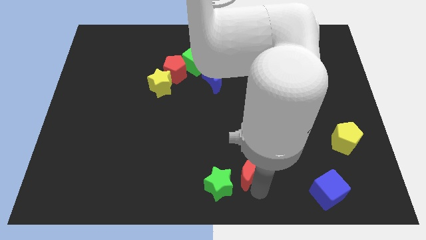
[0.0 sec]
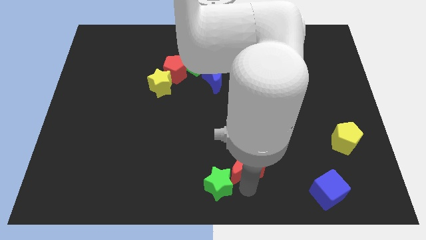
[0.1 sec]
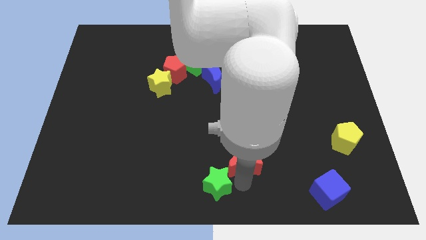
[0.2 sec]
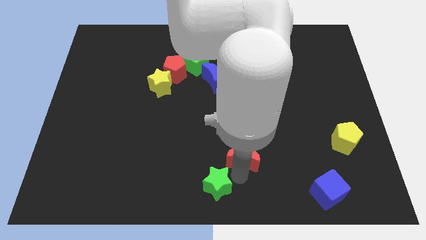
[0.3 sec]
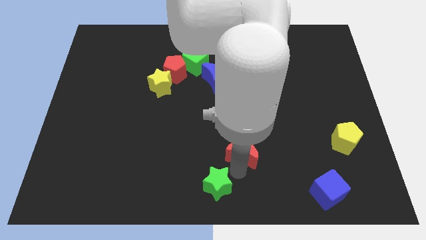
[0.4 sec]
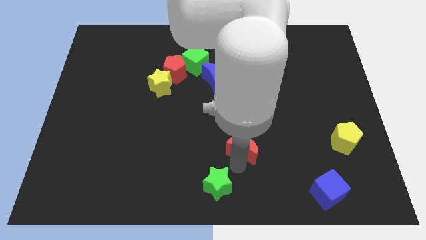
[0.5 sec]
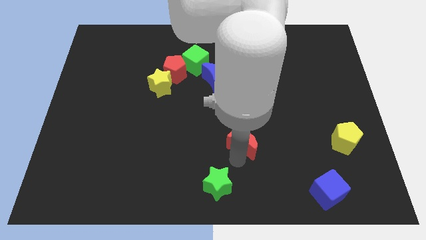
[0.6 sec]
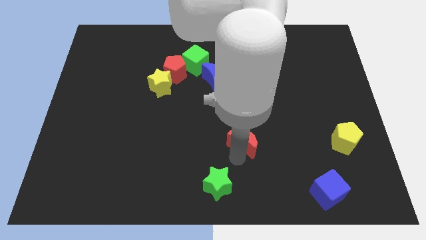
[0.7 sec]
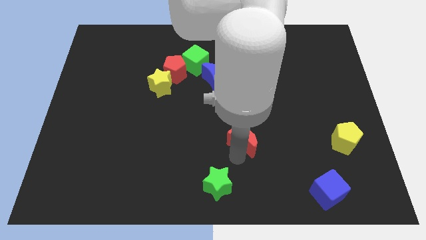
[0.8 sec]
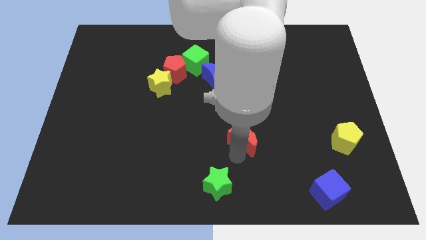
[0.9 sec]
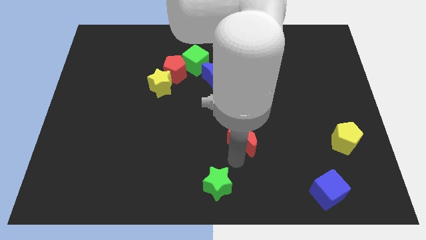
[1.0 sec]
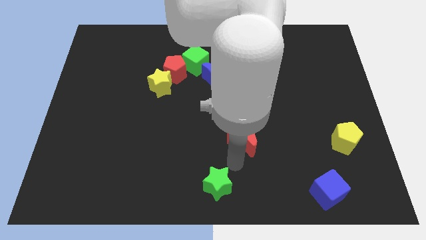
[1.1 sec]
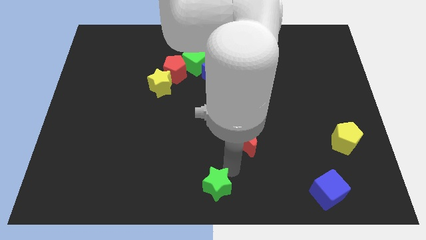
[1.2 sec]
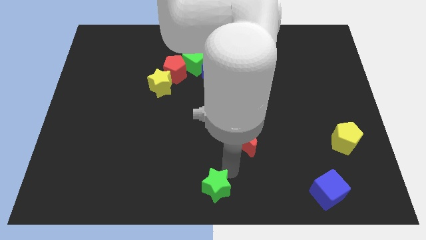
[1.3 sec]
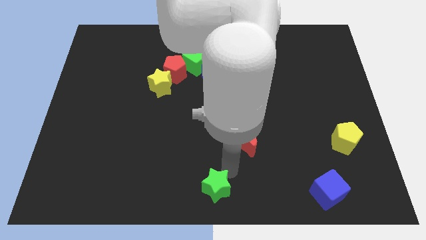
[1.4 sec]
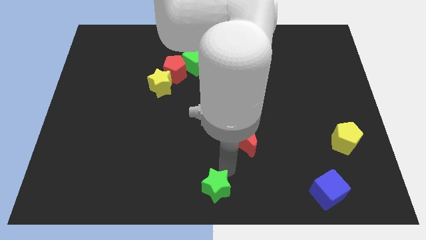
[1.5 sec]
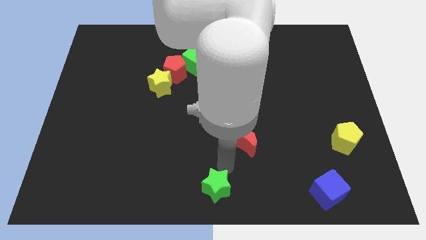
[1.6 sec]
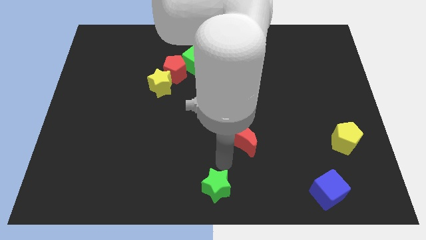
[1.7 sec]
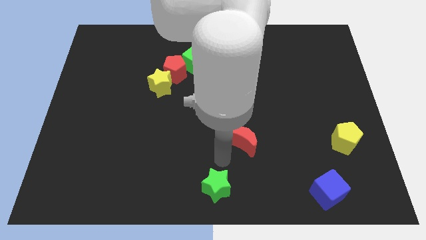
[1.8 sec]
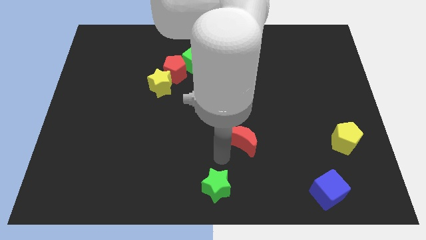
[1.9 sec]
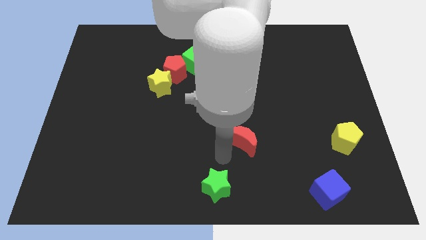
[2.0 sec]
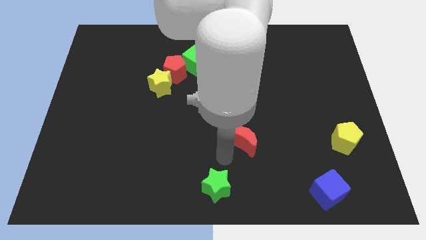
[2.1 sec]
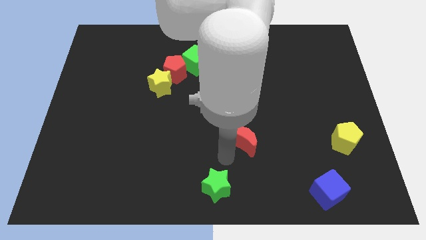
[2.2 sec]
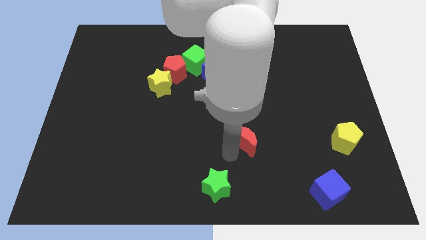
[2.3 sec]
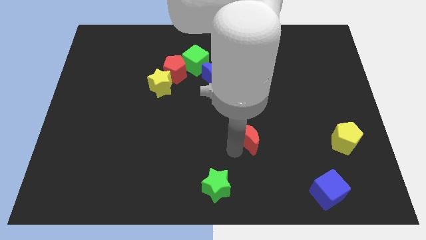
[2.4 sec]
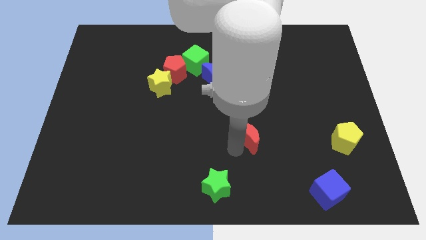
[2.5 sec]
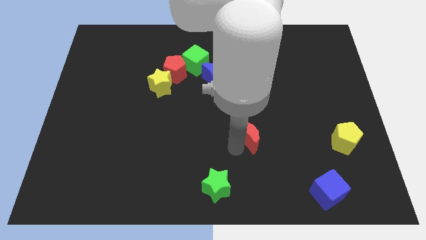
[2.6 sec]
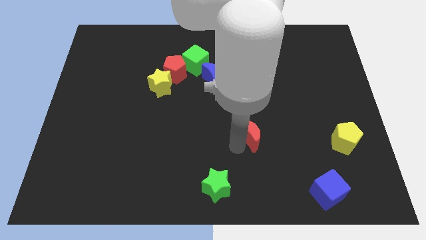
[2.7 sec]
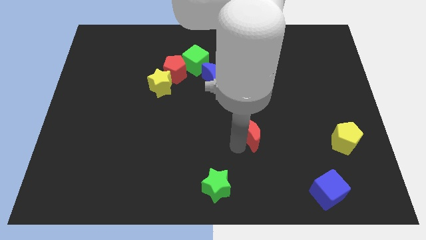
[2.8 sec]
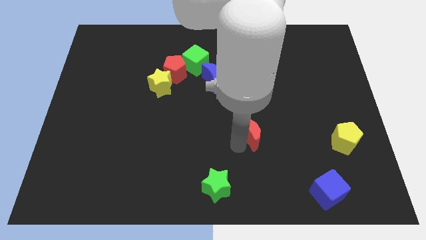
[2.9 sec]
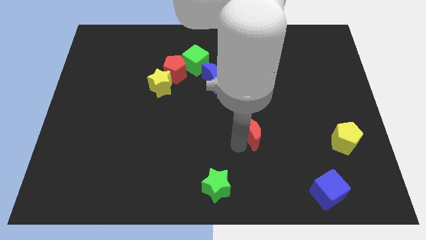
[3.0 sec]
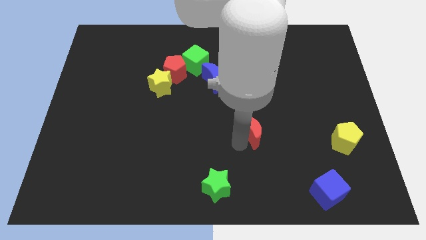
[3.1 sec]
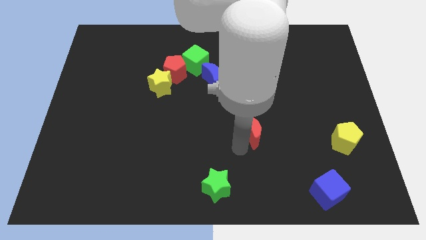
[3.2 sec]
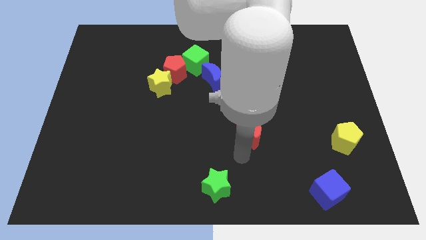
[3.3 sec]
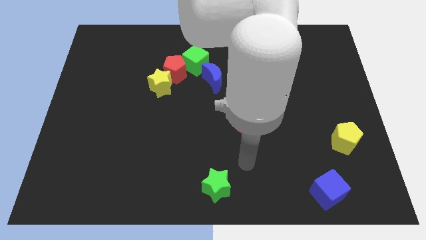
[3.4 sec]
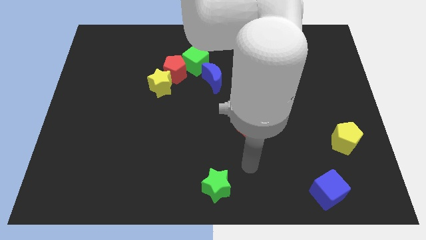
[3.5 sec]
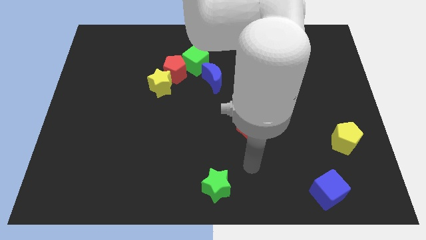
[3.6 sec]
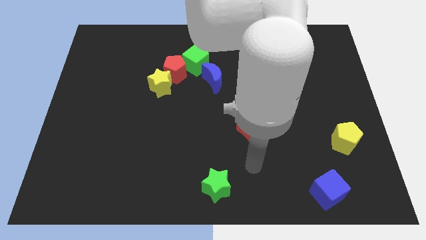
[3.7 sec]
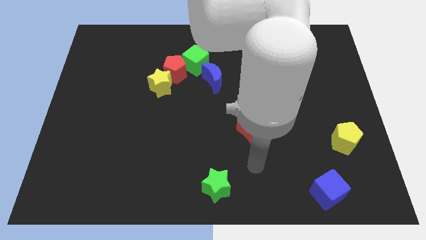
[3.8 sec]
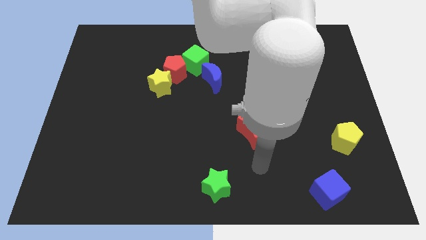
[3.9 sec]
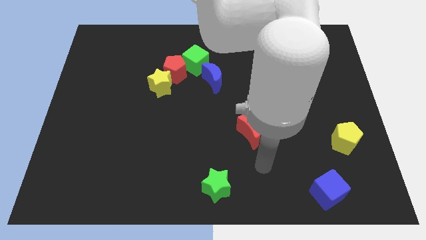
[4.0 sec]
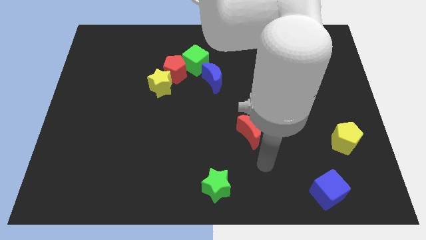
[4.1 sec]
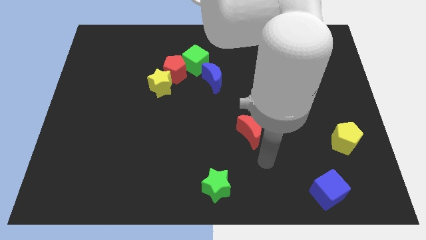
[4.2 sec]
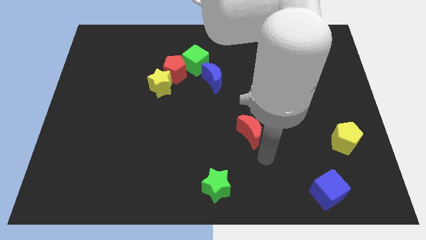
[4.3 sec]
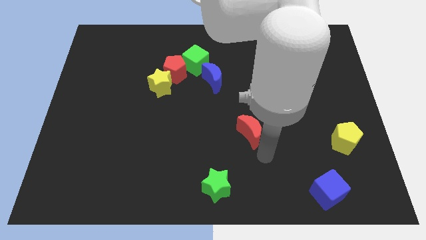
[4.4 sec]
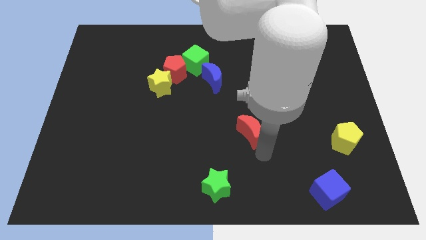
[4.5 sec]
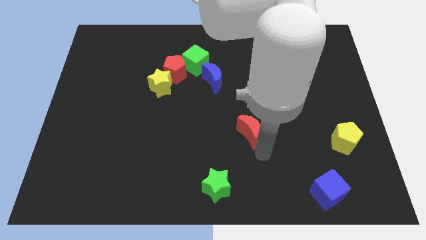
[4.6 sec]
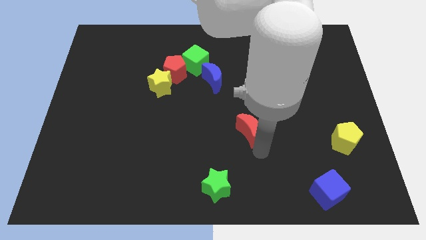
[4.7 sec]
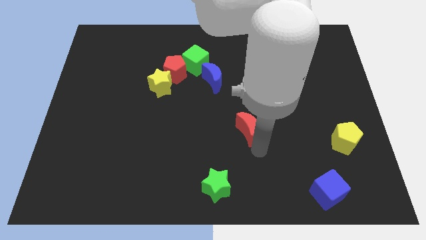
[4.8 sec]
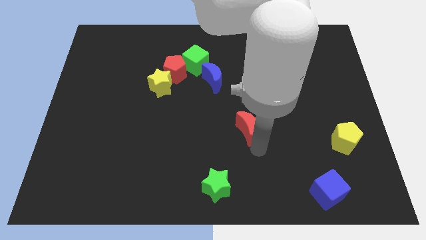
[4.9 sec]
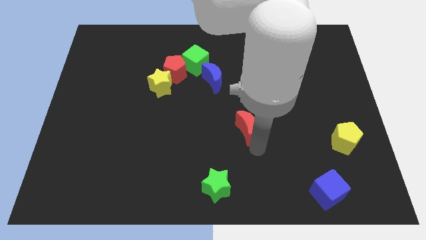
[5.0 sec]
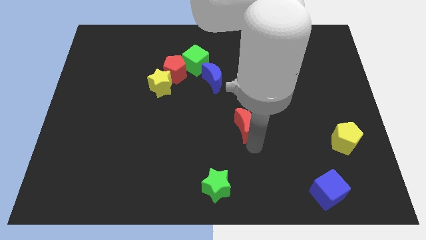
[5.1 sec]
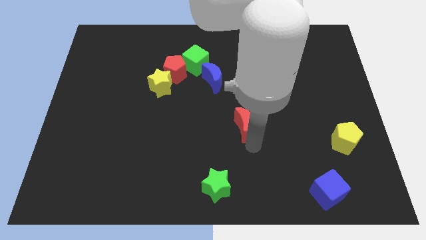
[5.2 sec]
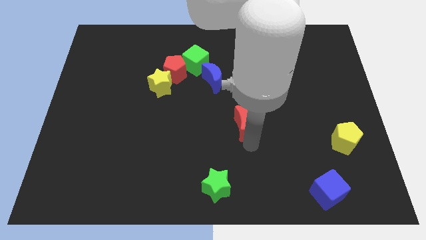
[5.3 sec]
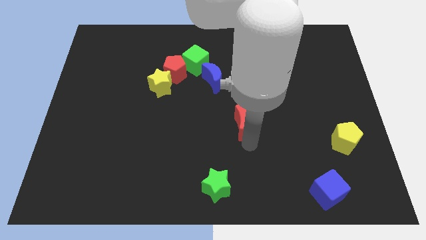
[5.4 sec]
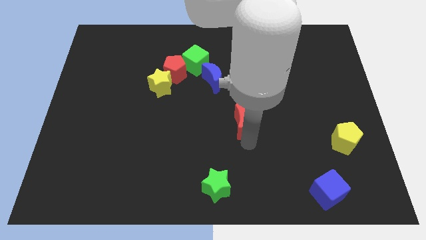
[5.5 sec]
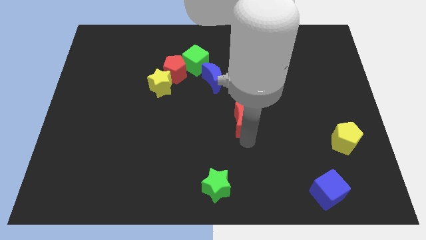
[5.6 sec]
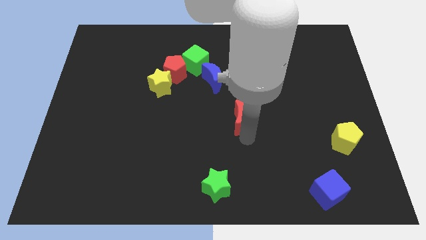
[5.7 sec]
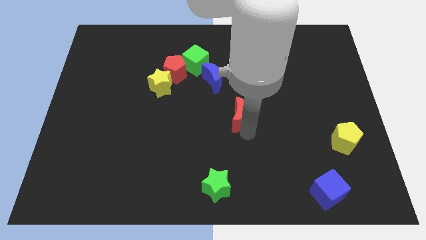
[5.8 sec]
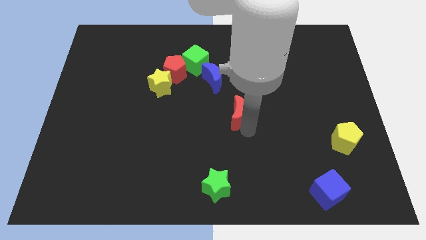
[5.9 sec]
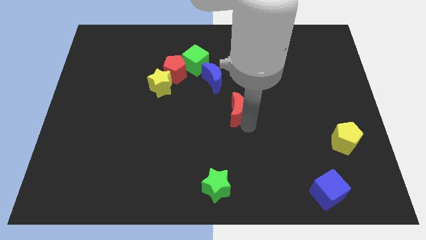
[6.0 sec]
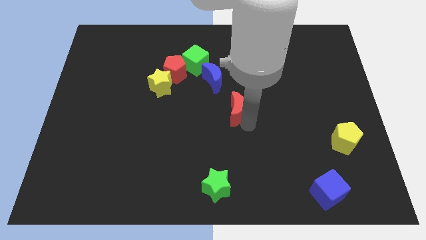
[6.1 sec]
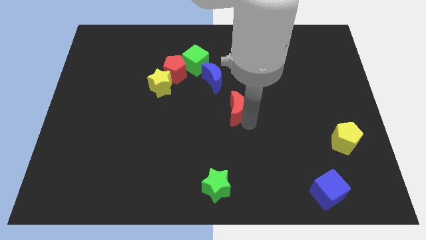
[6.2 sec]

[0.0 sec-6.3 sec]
separate red moon from green star

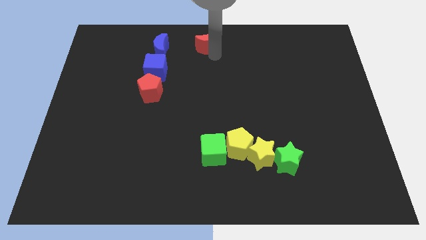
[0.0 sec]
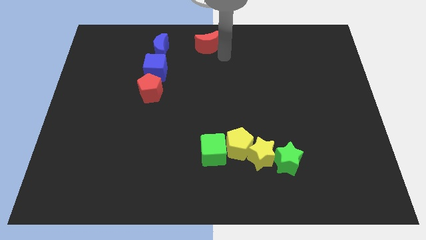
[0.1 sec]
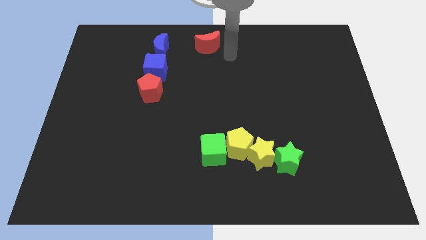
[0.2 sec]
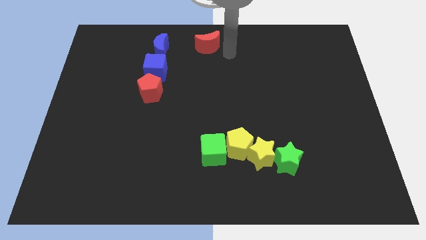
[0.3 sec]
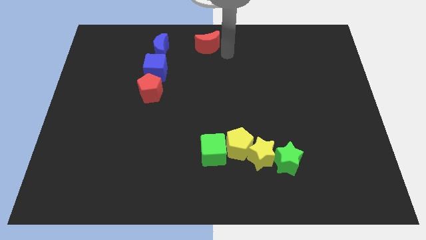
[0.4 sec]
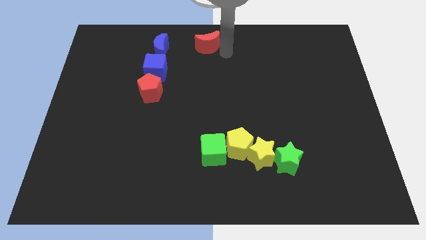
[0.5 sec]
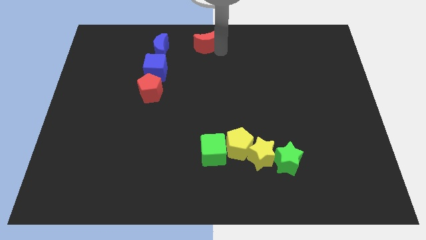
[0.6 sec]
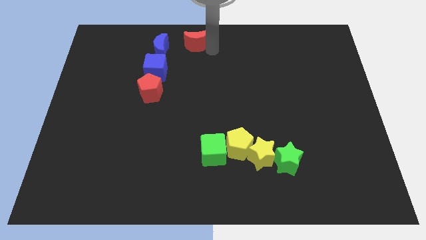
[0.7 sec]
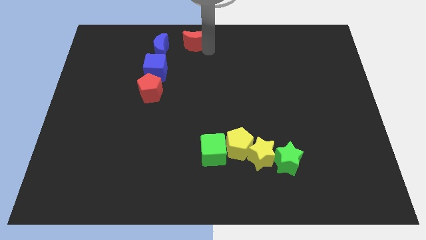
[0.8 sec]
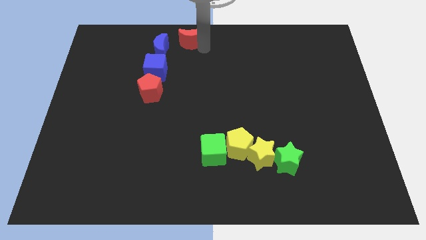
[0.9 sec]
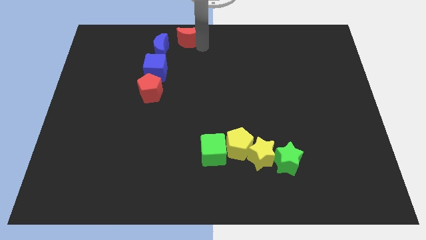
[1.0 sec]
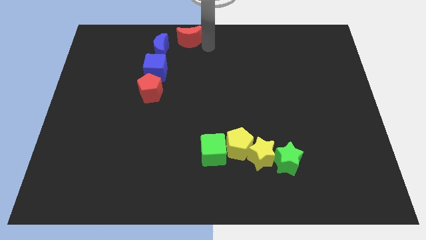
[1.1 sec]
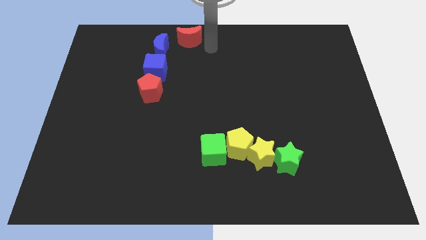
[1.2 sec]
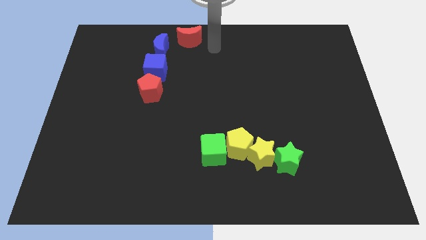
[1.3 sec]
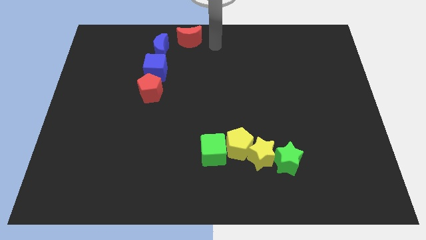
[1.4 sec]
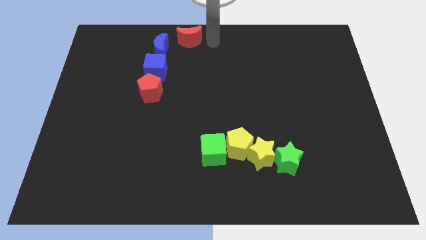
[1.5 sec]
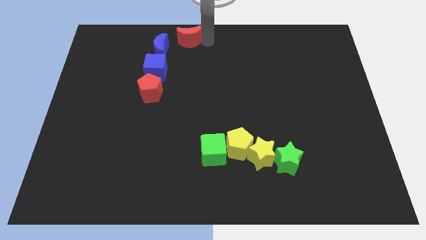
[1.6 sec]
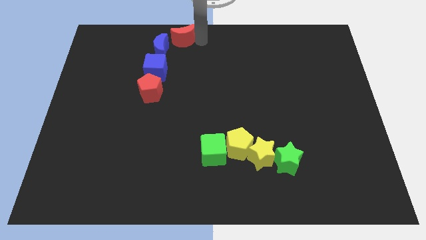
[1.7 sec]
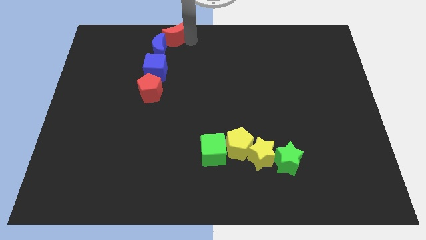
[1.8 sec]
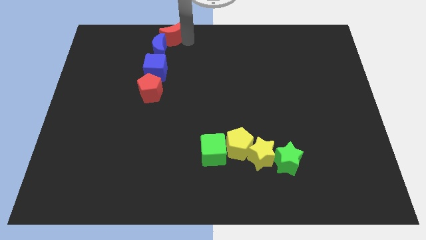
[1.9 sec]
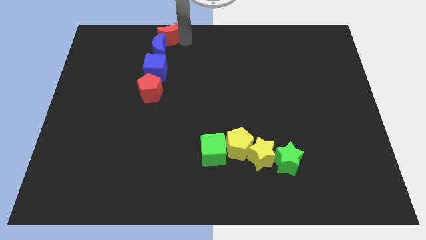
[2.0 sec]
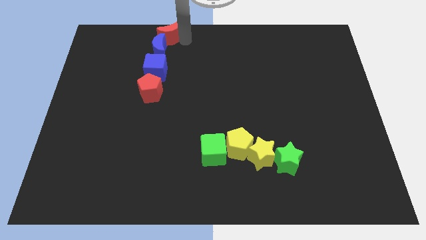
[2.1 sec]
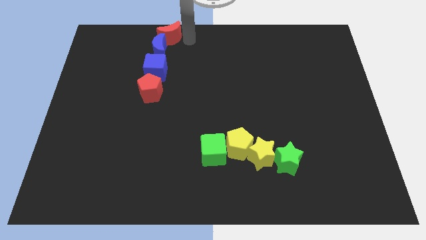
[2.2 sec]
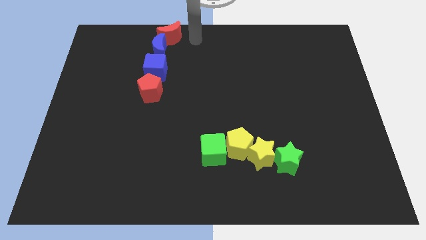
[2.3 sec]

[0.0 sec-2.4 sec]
place the red moon above the blue moon

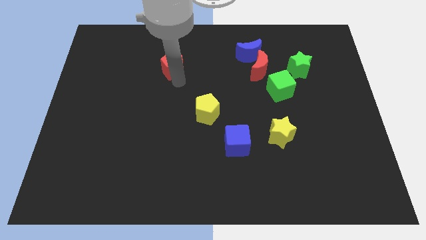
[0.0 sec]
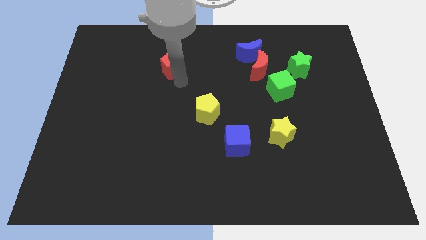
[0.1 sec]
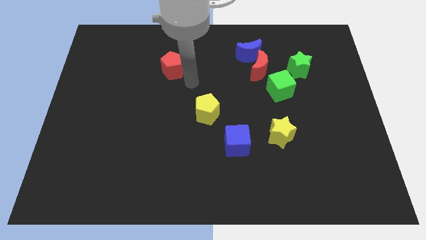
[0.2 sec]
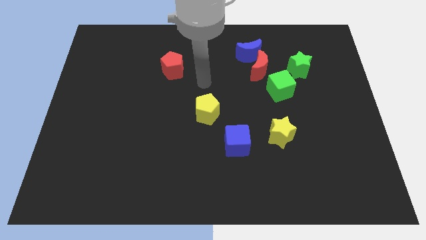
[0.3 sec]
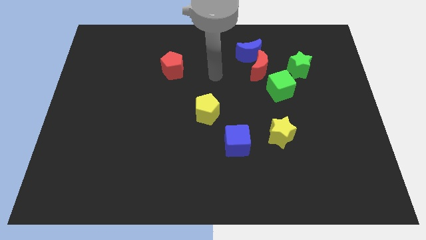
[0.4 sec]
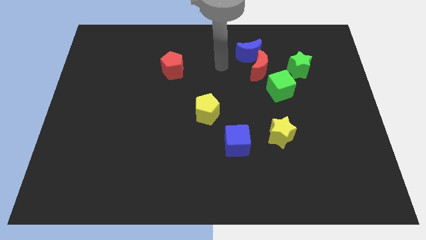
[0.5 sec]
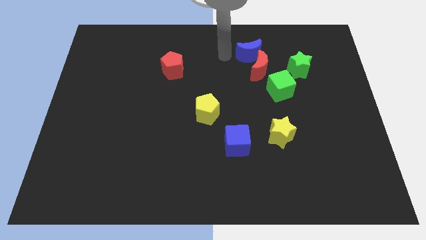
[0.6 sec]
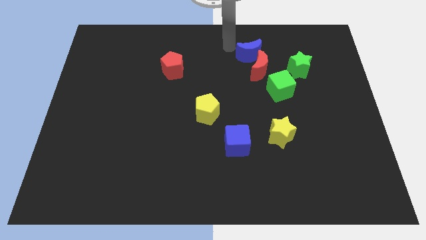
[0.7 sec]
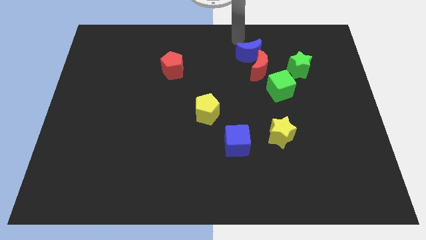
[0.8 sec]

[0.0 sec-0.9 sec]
move your arm to the top of the blue crescent
